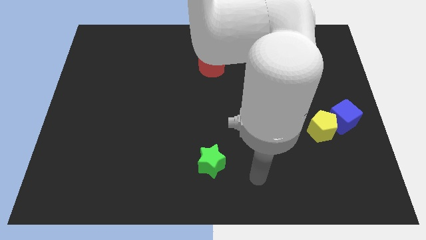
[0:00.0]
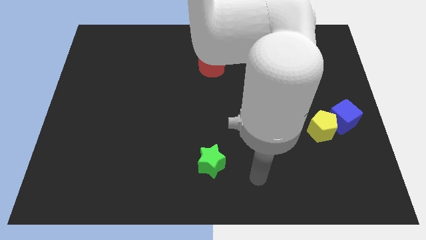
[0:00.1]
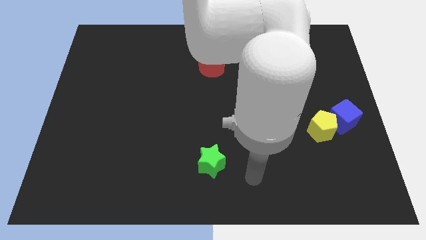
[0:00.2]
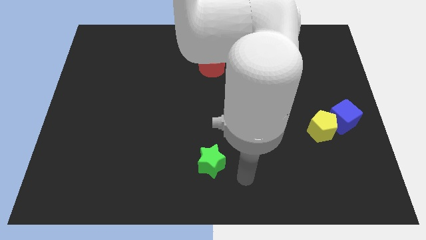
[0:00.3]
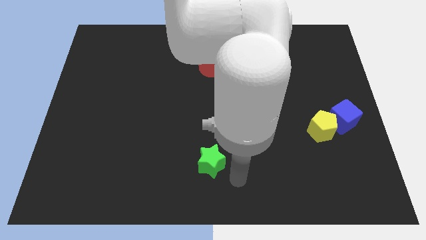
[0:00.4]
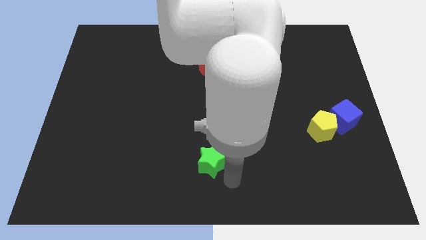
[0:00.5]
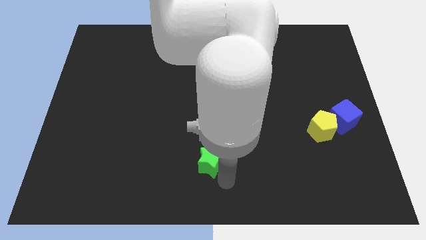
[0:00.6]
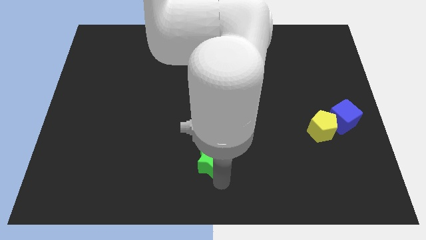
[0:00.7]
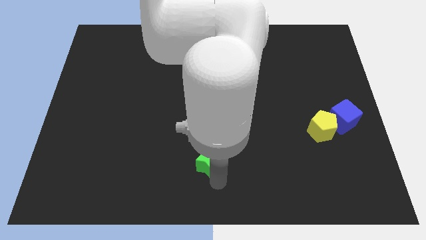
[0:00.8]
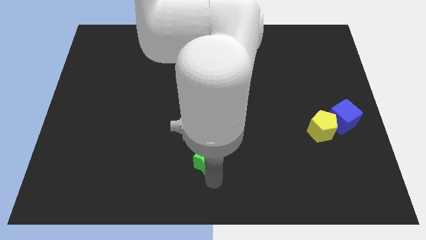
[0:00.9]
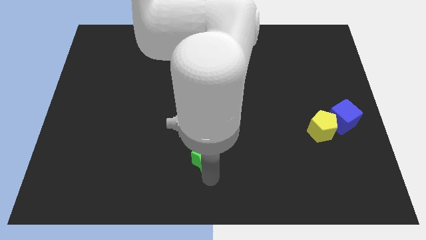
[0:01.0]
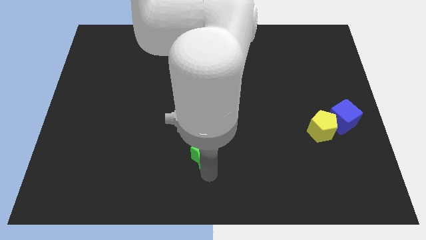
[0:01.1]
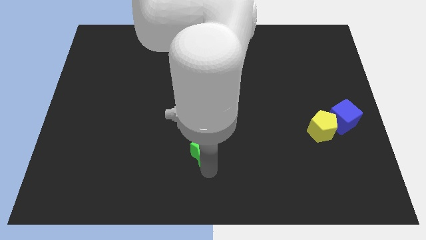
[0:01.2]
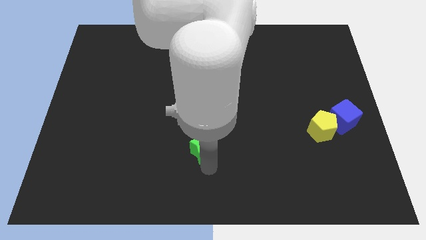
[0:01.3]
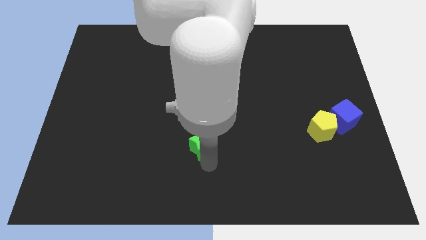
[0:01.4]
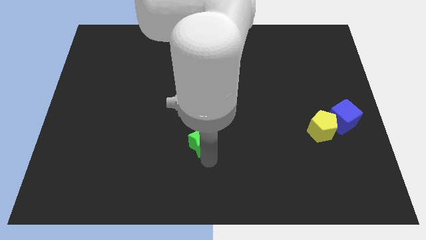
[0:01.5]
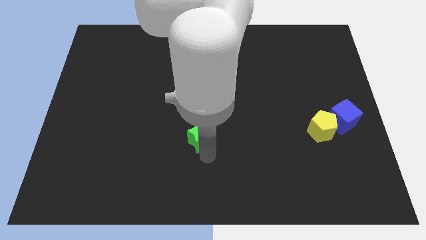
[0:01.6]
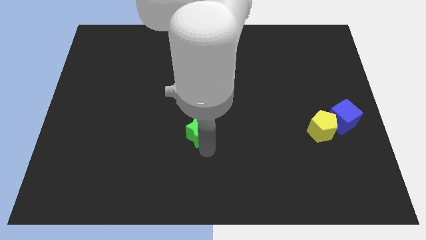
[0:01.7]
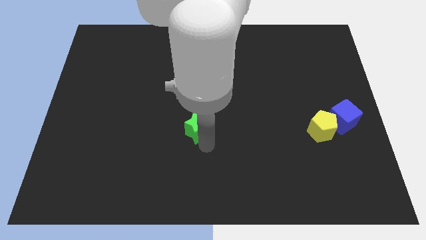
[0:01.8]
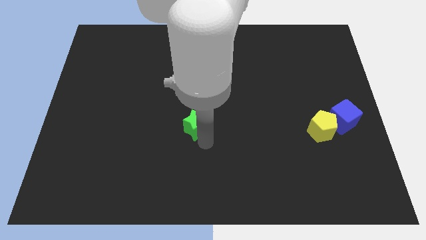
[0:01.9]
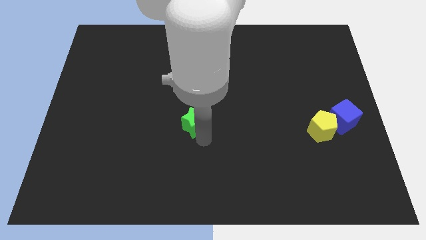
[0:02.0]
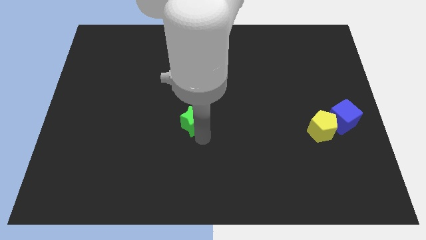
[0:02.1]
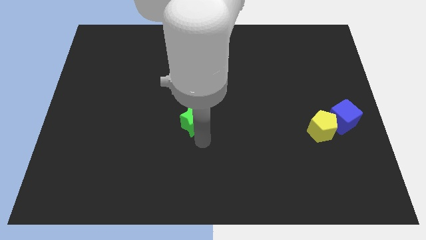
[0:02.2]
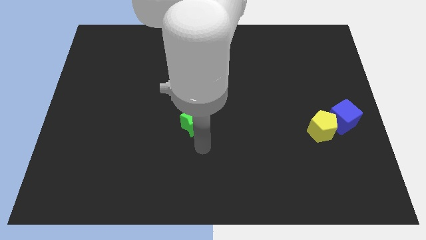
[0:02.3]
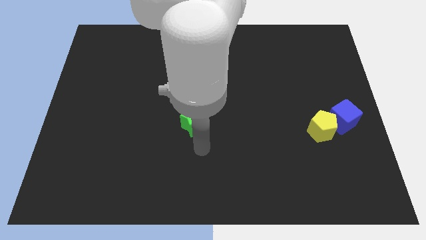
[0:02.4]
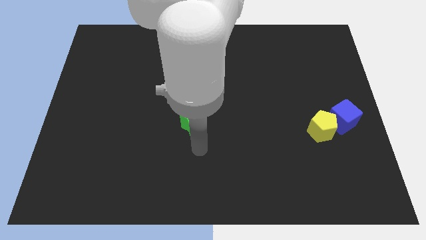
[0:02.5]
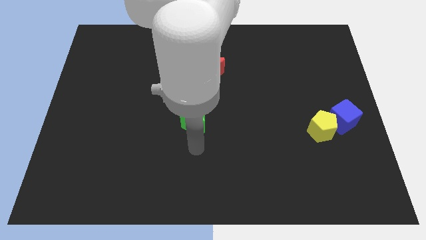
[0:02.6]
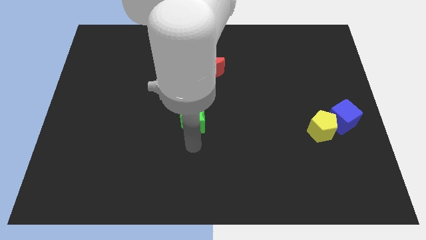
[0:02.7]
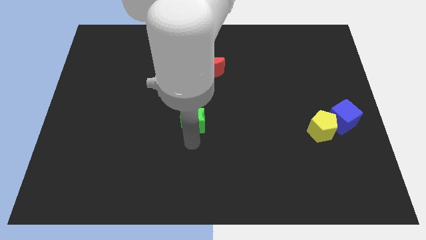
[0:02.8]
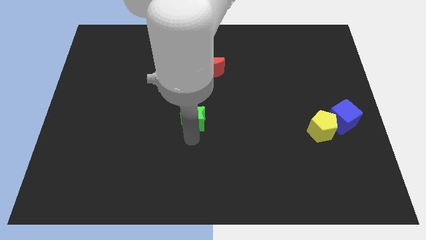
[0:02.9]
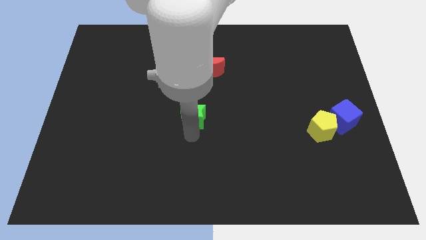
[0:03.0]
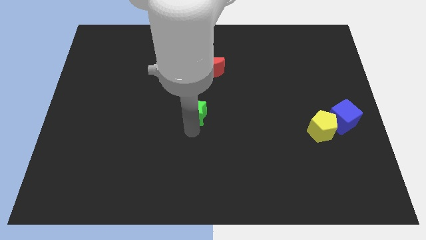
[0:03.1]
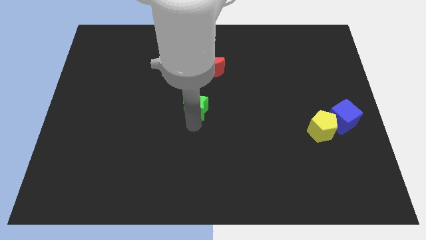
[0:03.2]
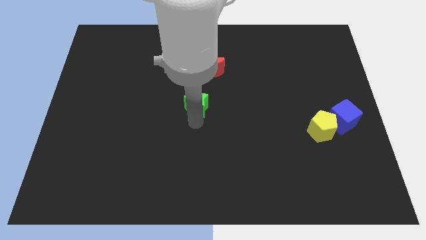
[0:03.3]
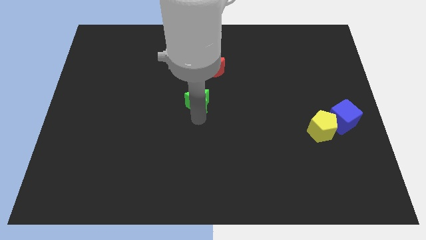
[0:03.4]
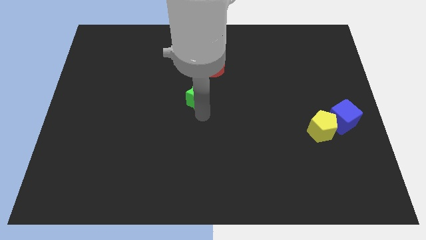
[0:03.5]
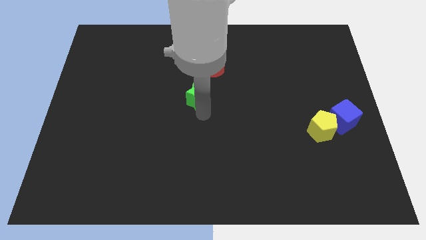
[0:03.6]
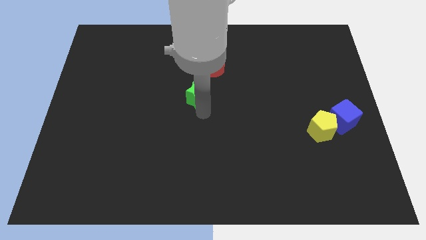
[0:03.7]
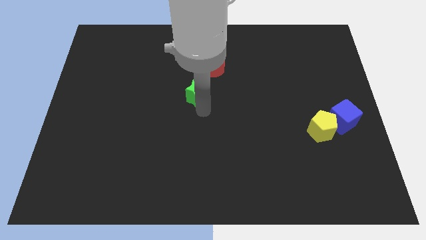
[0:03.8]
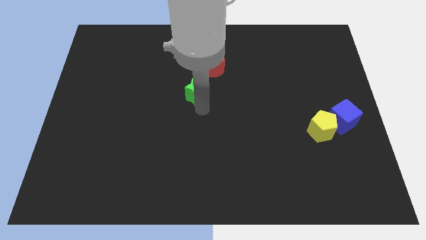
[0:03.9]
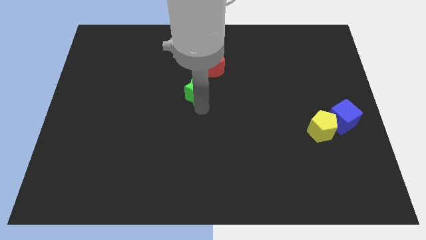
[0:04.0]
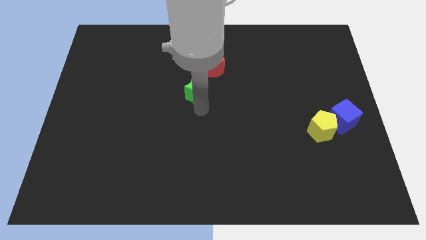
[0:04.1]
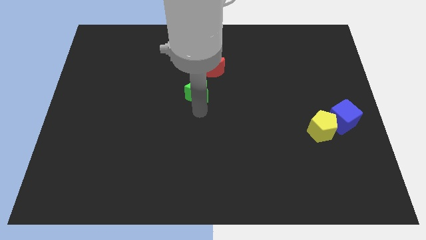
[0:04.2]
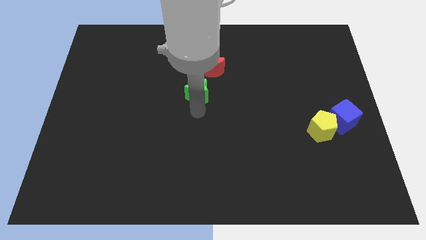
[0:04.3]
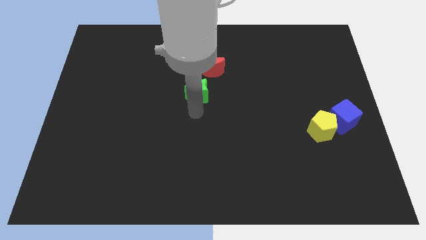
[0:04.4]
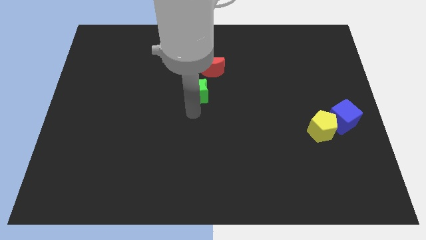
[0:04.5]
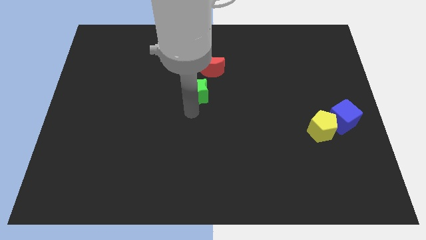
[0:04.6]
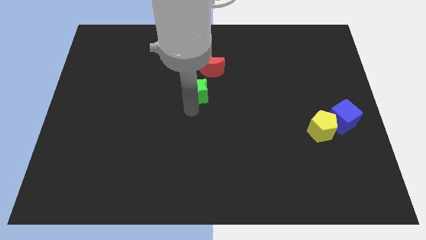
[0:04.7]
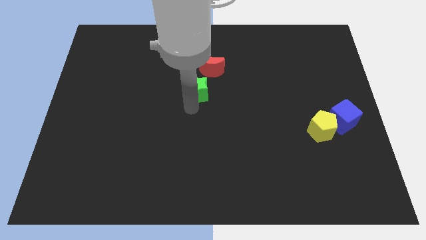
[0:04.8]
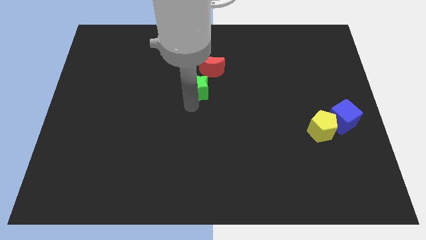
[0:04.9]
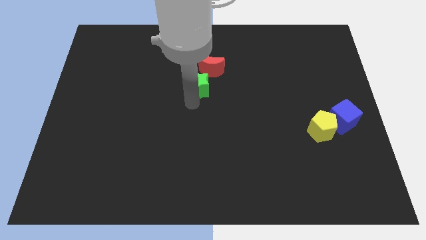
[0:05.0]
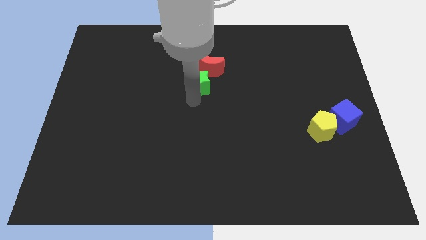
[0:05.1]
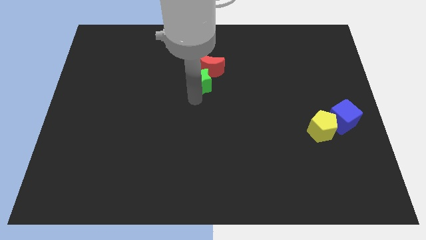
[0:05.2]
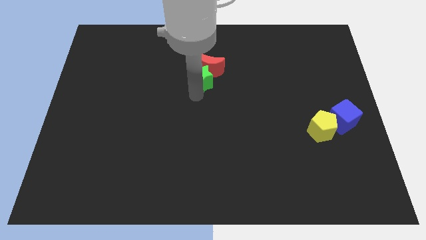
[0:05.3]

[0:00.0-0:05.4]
slide the star close to the red block

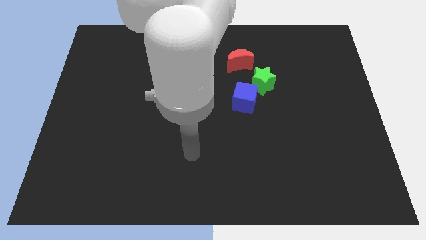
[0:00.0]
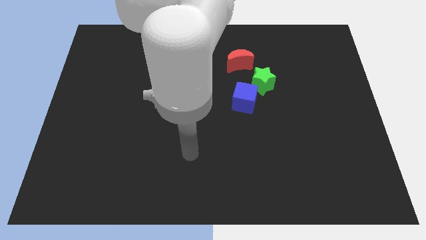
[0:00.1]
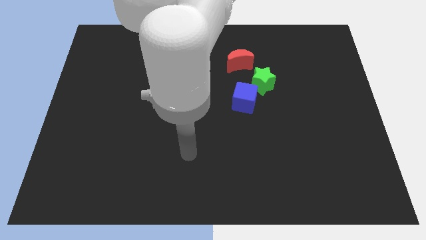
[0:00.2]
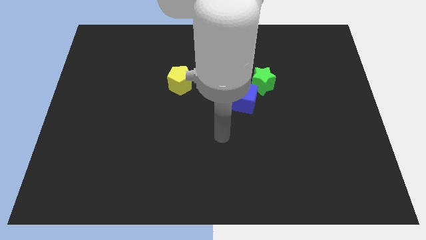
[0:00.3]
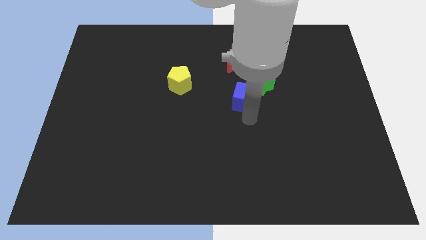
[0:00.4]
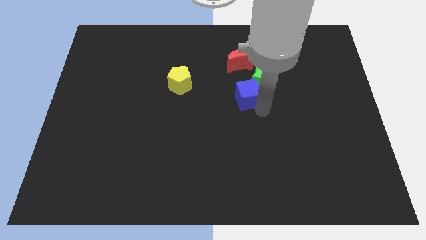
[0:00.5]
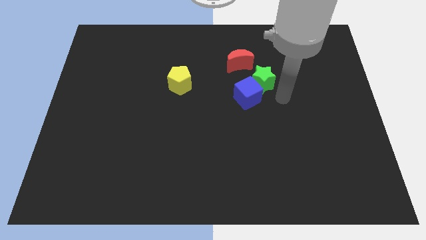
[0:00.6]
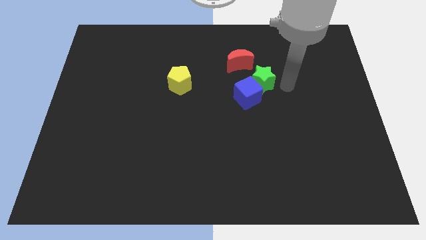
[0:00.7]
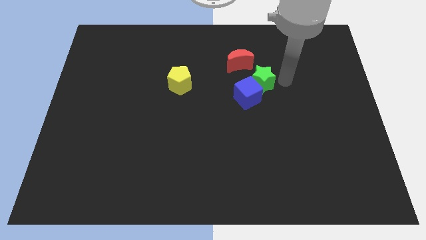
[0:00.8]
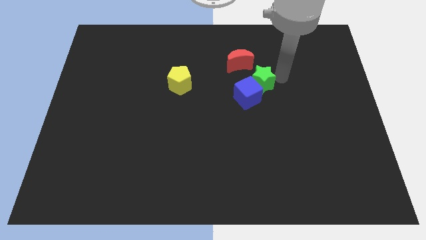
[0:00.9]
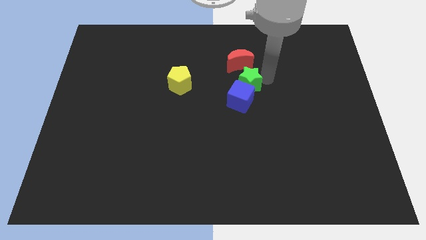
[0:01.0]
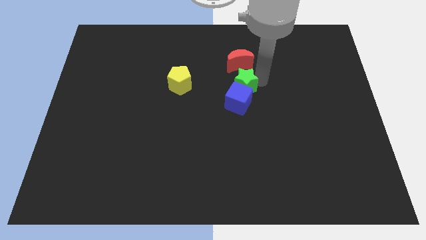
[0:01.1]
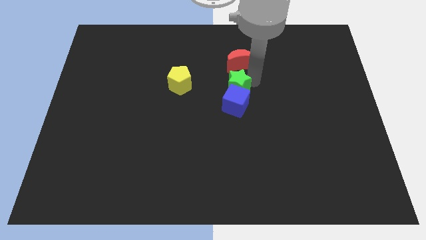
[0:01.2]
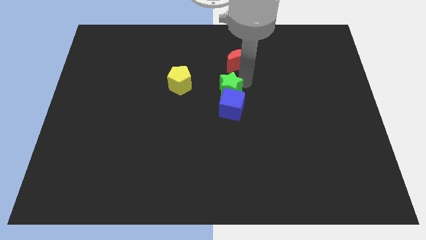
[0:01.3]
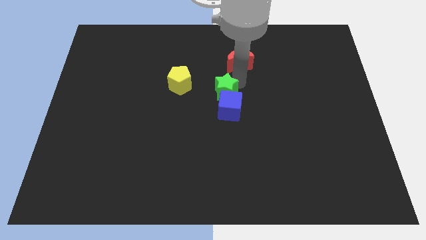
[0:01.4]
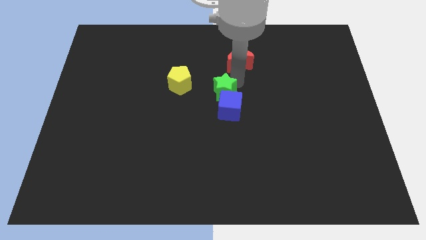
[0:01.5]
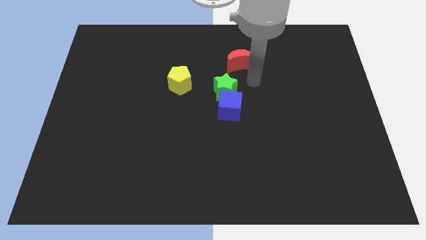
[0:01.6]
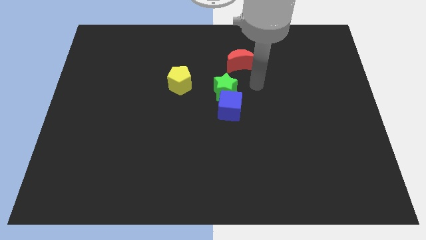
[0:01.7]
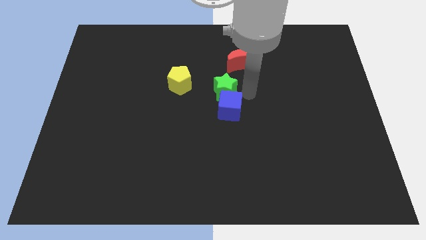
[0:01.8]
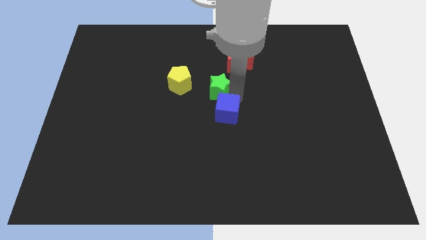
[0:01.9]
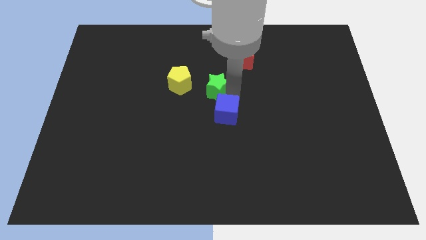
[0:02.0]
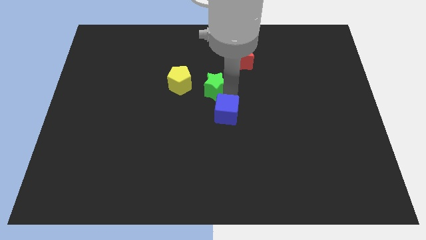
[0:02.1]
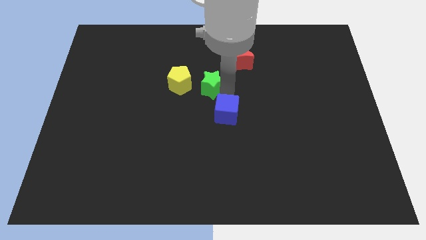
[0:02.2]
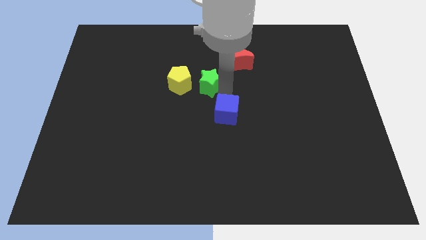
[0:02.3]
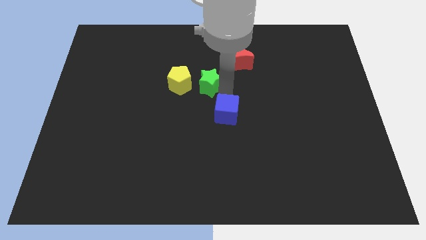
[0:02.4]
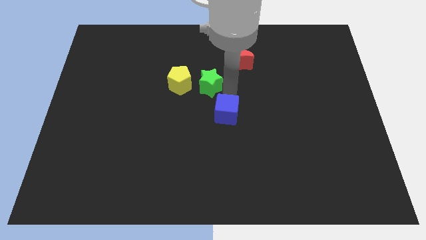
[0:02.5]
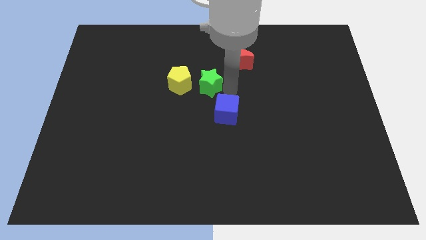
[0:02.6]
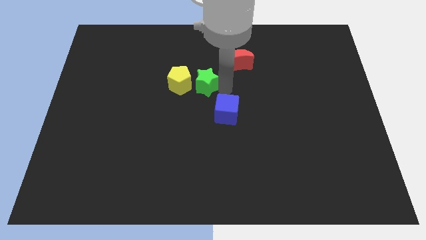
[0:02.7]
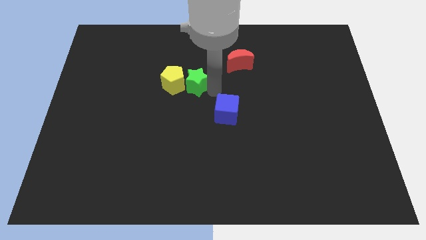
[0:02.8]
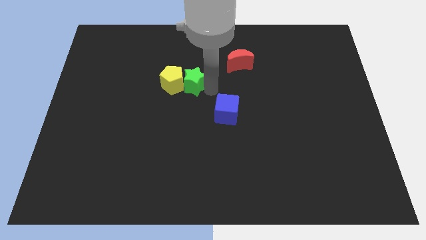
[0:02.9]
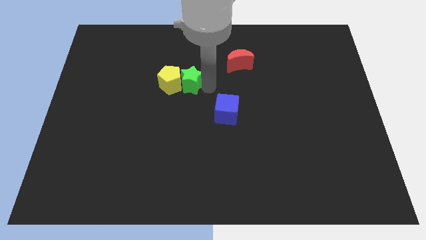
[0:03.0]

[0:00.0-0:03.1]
put the green star to the pentagon

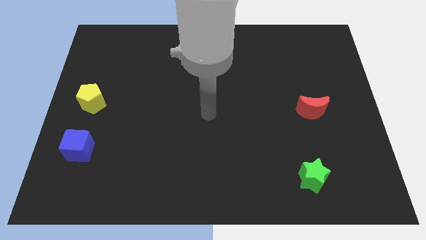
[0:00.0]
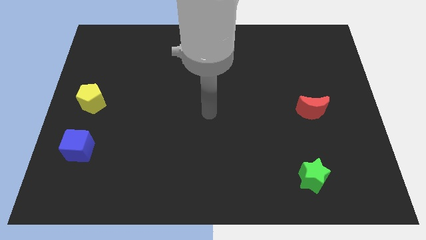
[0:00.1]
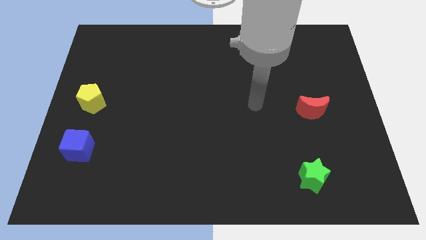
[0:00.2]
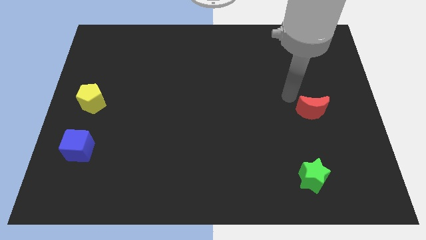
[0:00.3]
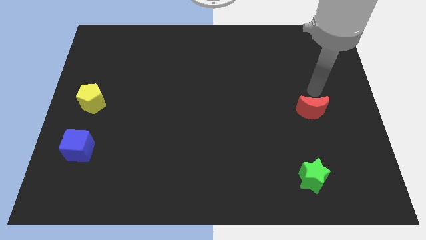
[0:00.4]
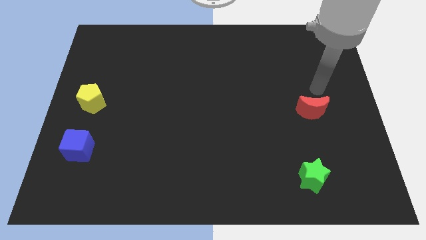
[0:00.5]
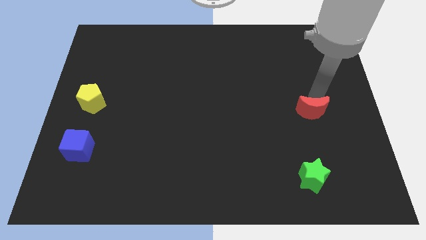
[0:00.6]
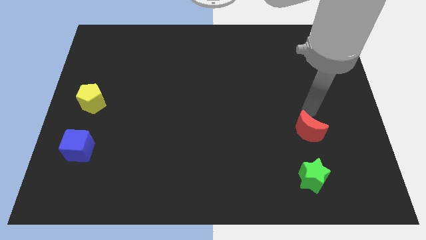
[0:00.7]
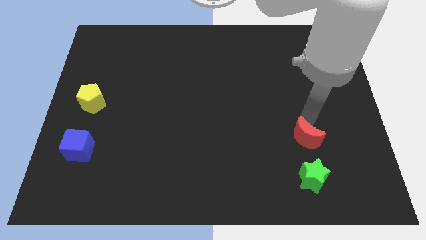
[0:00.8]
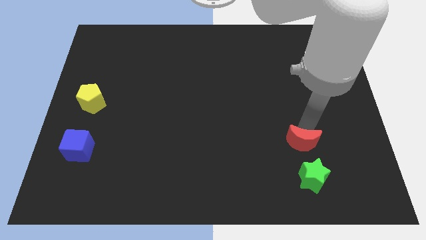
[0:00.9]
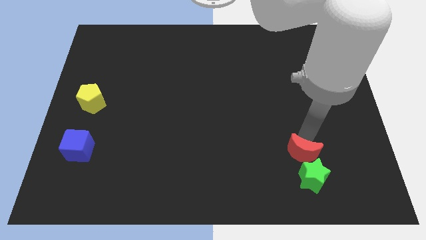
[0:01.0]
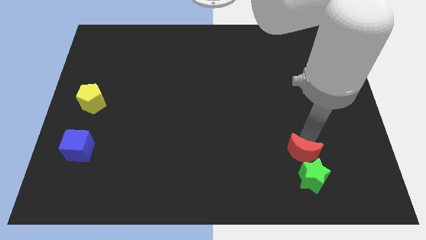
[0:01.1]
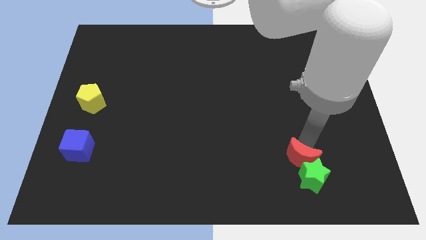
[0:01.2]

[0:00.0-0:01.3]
push the red moon next to the star
